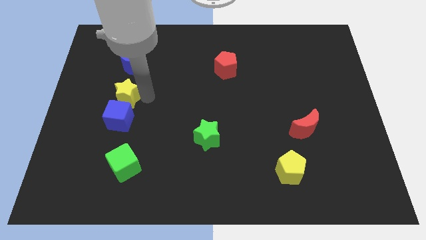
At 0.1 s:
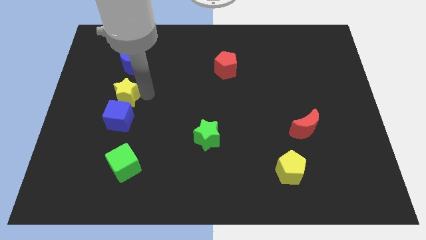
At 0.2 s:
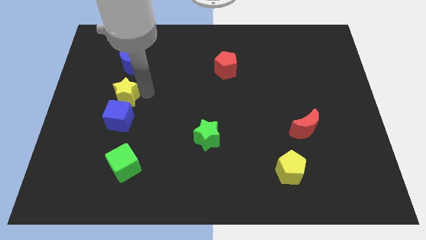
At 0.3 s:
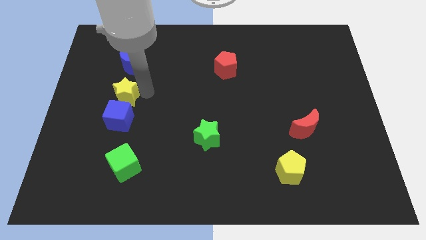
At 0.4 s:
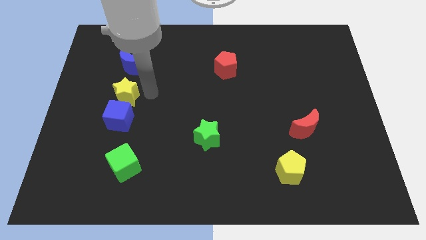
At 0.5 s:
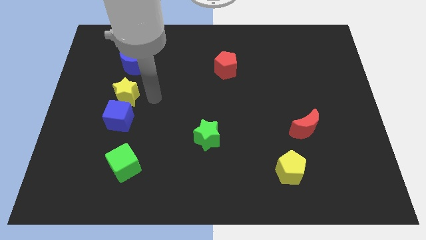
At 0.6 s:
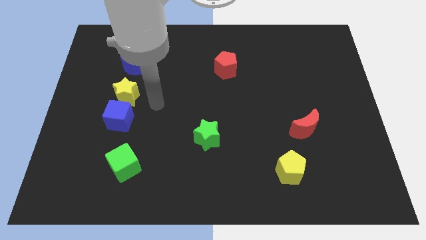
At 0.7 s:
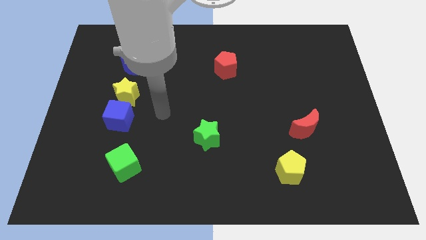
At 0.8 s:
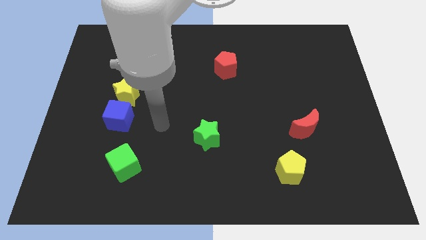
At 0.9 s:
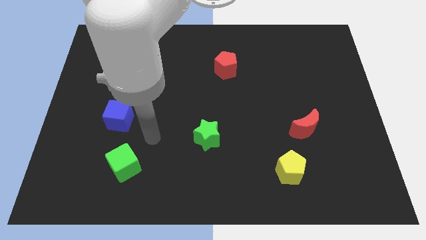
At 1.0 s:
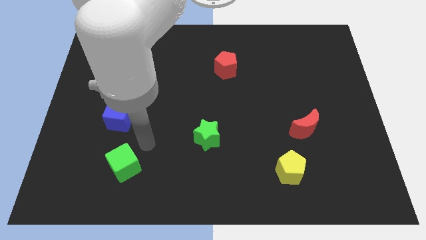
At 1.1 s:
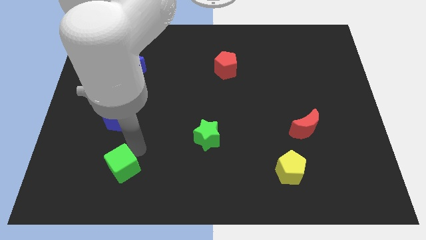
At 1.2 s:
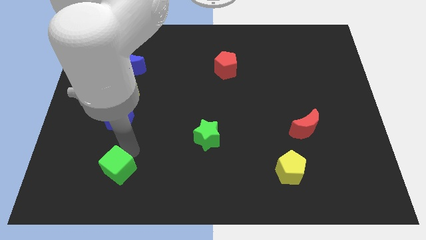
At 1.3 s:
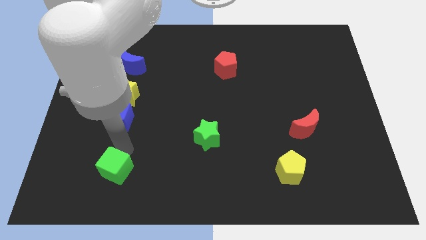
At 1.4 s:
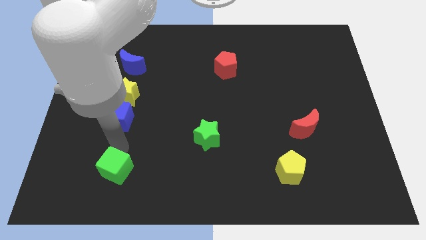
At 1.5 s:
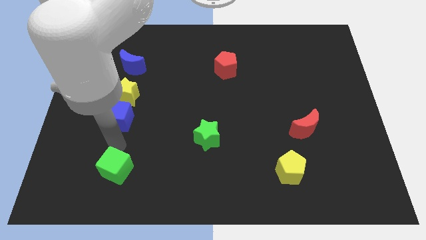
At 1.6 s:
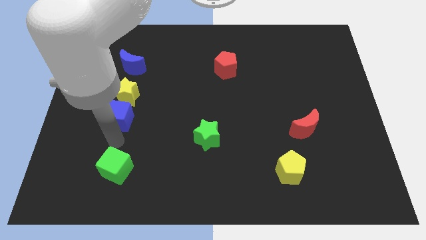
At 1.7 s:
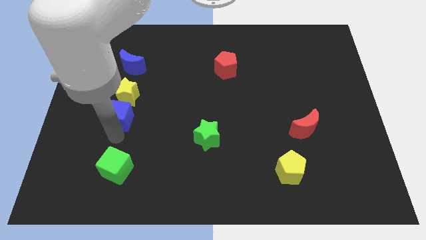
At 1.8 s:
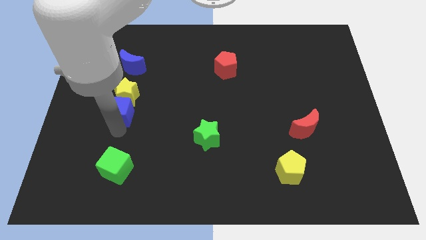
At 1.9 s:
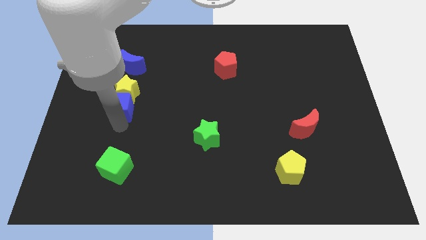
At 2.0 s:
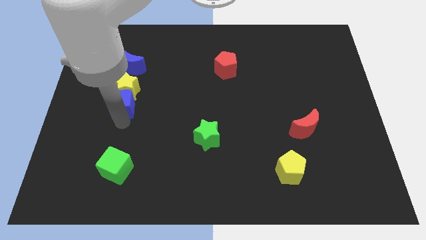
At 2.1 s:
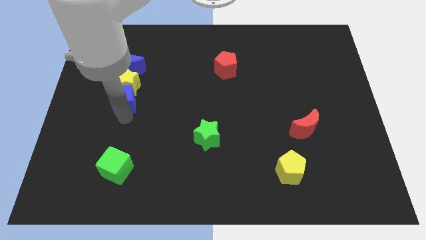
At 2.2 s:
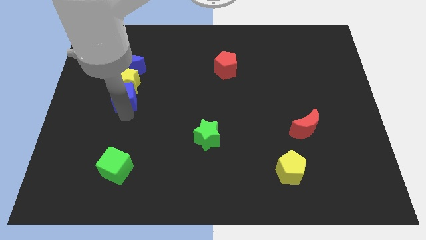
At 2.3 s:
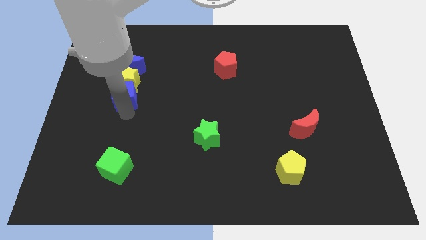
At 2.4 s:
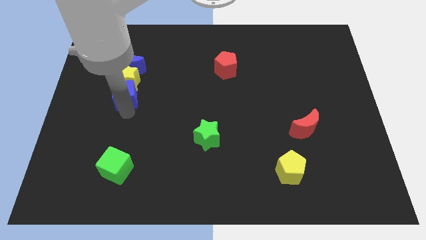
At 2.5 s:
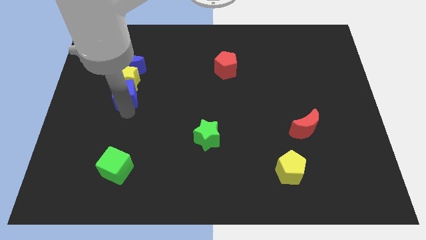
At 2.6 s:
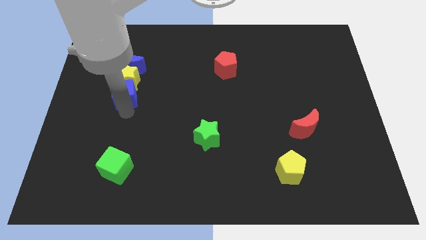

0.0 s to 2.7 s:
push the blue cube and the yellow star into the blue crescent

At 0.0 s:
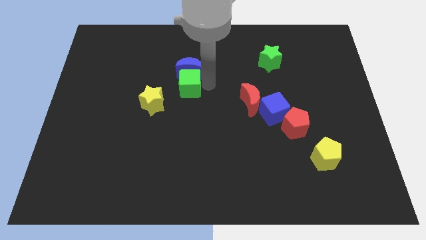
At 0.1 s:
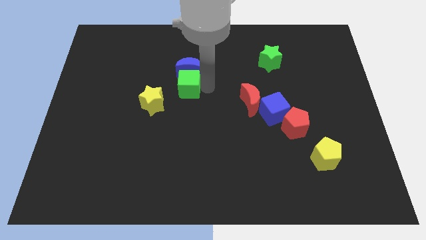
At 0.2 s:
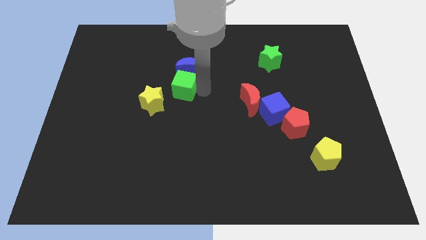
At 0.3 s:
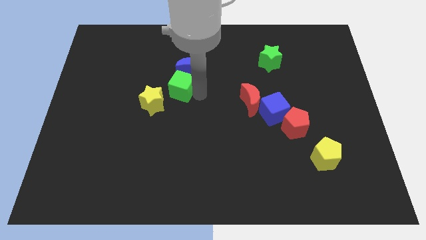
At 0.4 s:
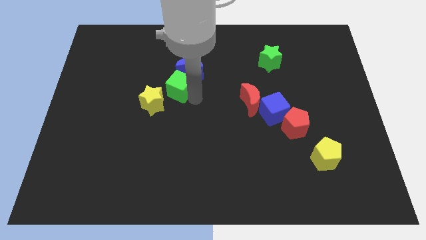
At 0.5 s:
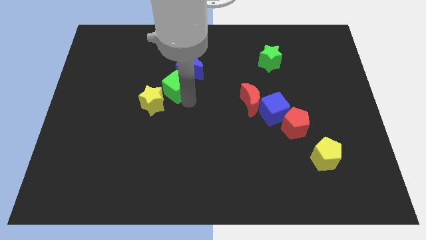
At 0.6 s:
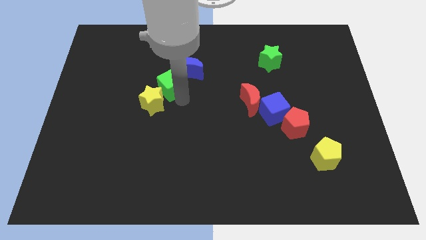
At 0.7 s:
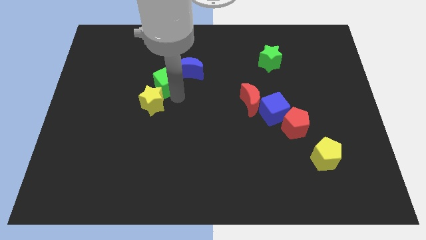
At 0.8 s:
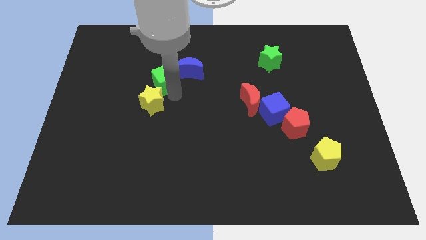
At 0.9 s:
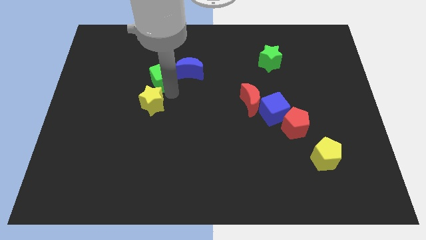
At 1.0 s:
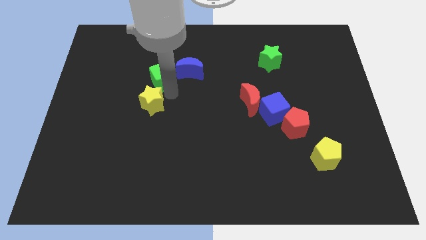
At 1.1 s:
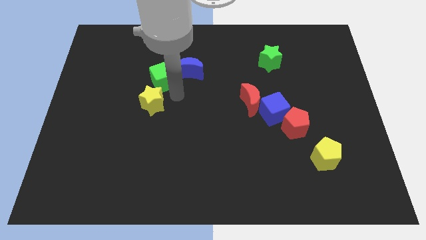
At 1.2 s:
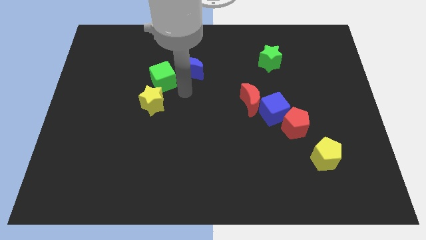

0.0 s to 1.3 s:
move the green cube in between the yellow star and blue crescent

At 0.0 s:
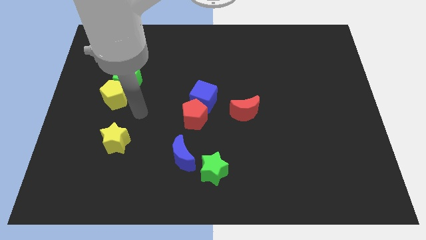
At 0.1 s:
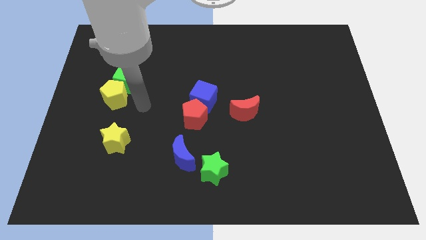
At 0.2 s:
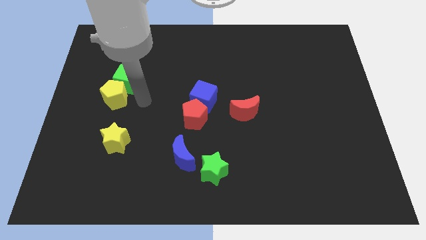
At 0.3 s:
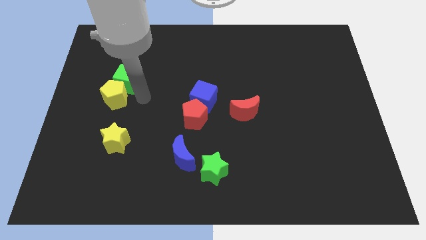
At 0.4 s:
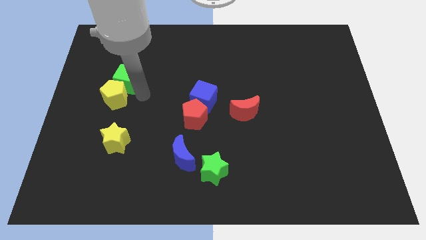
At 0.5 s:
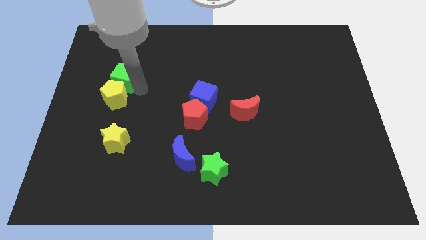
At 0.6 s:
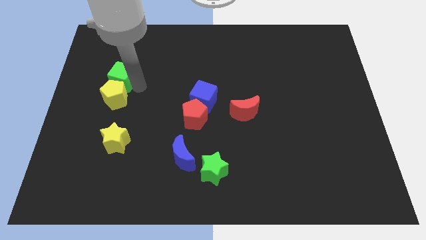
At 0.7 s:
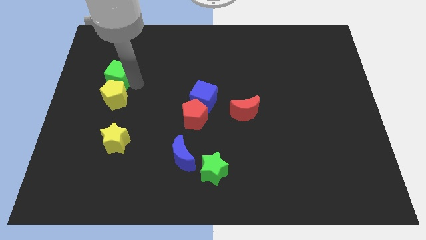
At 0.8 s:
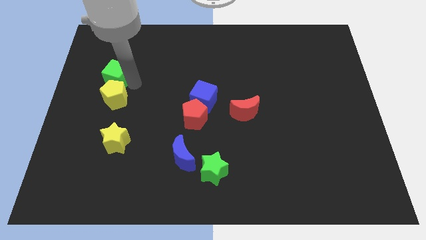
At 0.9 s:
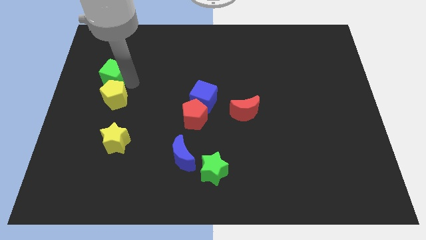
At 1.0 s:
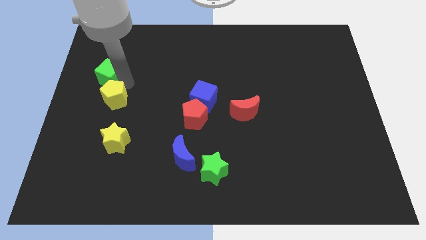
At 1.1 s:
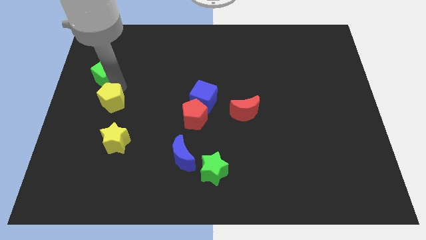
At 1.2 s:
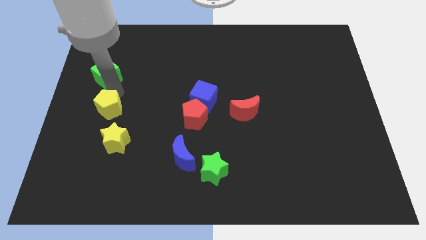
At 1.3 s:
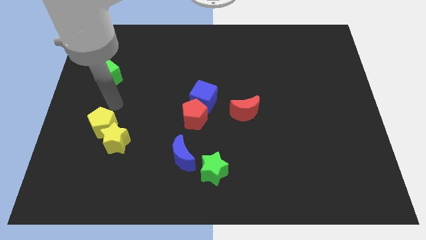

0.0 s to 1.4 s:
separate the yellow pentagon from the green cube

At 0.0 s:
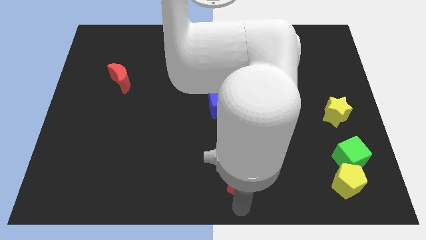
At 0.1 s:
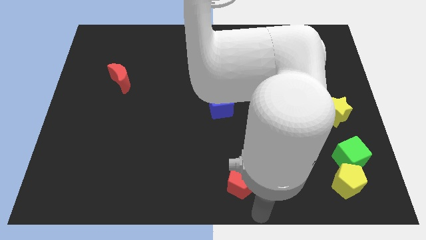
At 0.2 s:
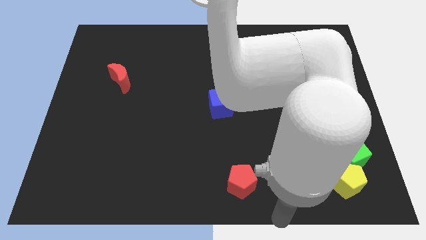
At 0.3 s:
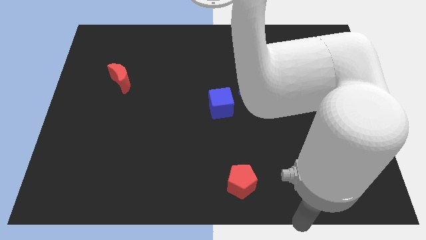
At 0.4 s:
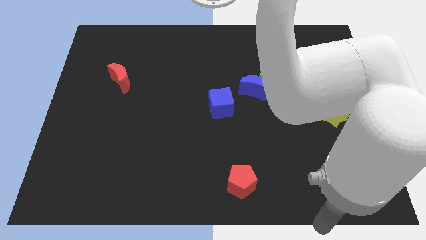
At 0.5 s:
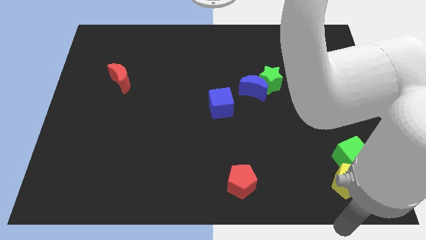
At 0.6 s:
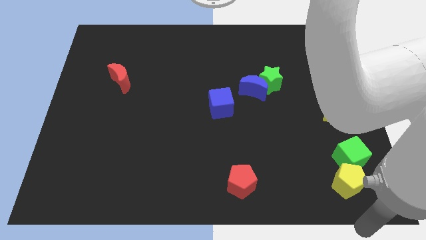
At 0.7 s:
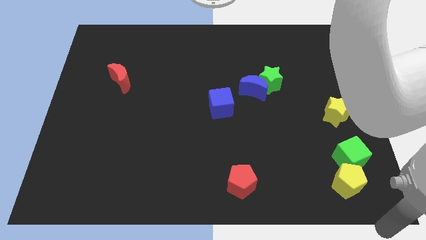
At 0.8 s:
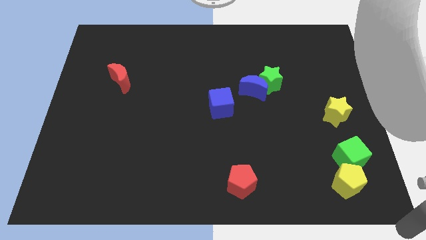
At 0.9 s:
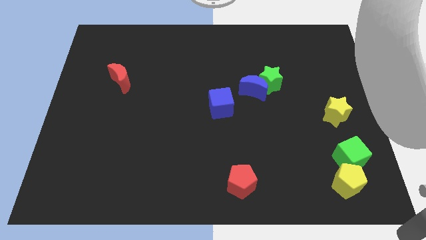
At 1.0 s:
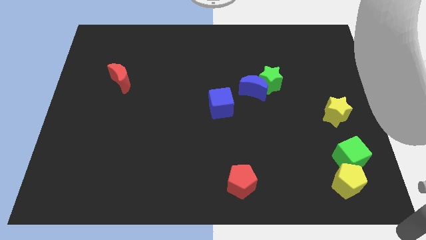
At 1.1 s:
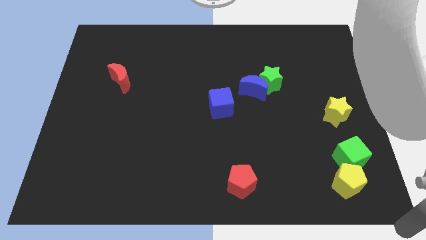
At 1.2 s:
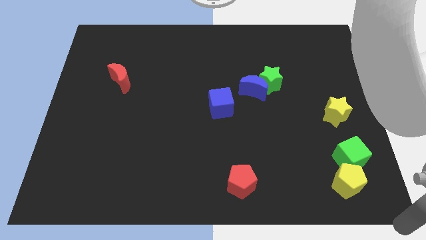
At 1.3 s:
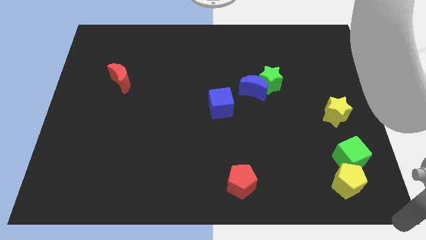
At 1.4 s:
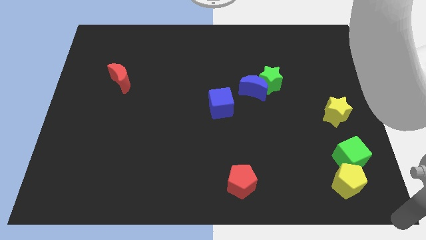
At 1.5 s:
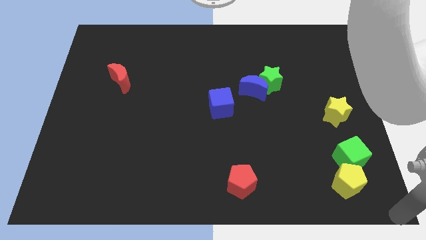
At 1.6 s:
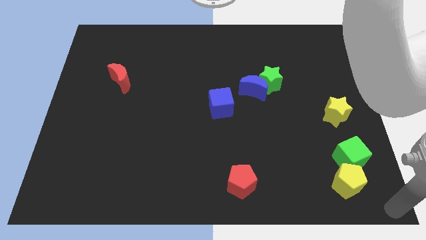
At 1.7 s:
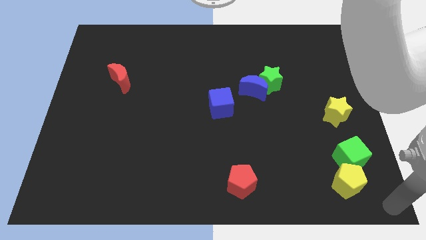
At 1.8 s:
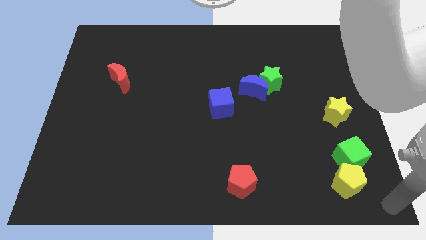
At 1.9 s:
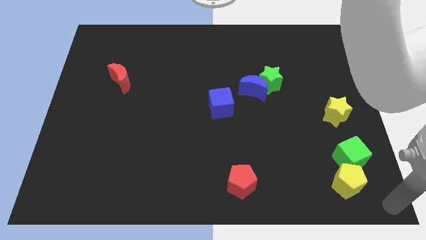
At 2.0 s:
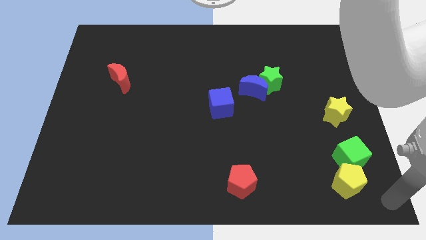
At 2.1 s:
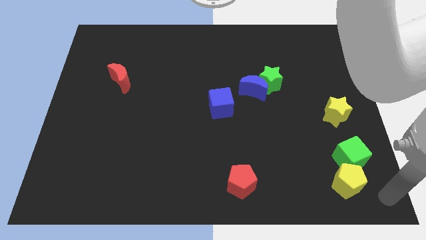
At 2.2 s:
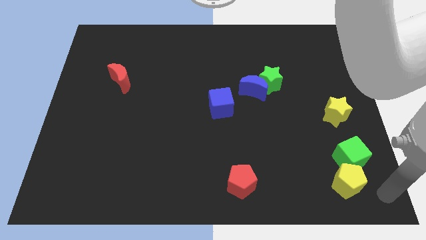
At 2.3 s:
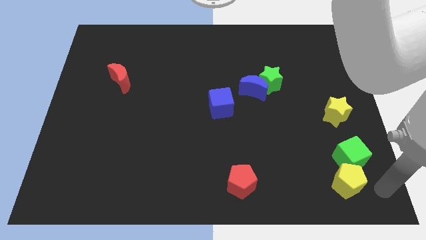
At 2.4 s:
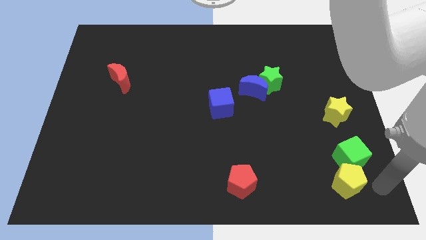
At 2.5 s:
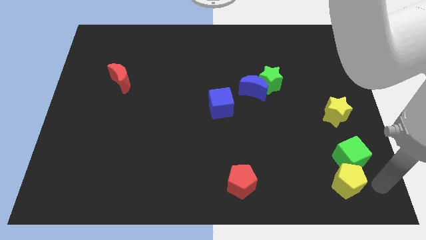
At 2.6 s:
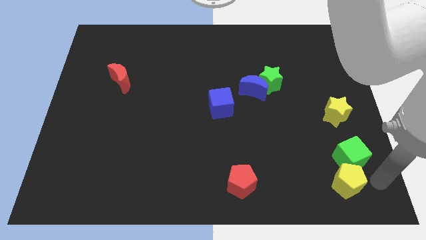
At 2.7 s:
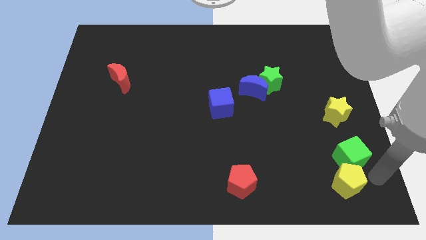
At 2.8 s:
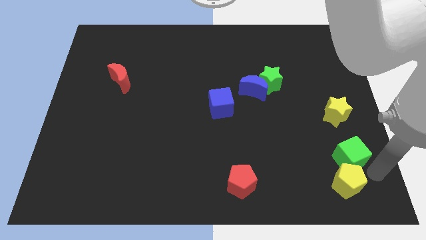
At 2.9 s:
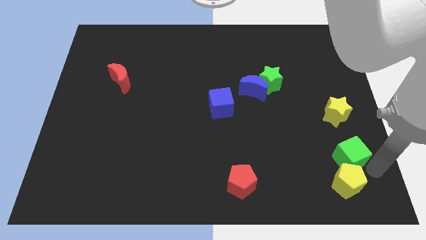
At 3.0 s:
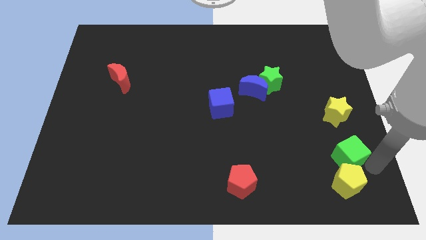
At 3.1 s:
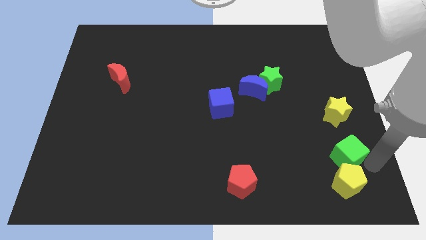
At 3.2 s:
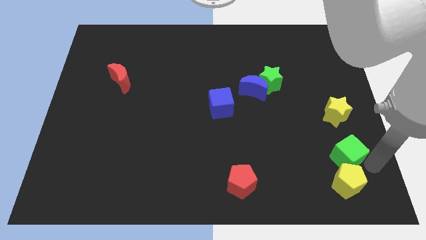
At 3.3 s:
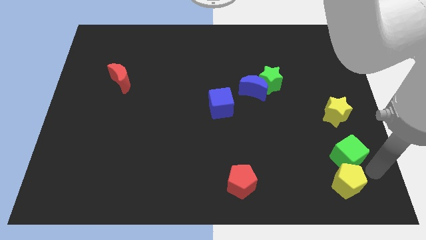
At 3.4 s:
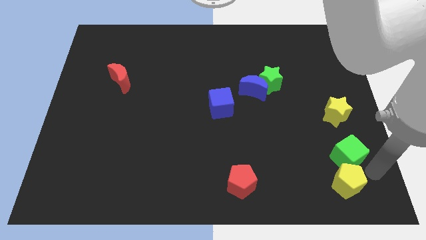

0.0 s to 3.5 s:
move the green cube slightly to the top

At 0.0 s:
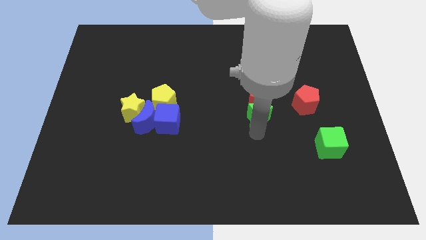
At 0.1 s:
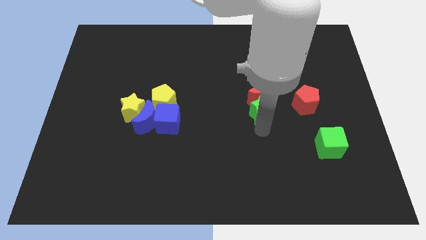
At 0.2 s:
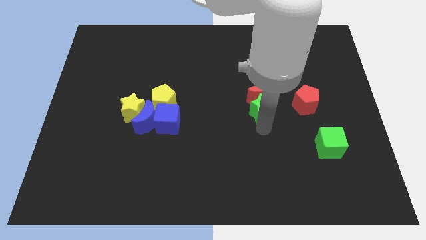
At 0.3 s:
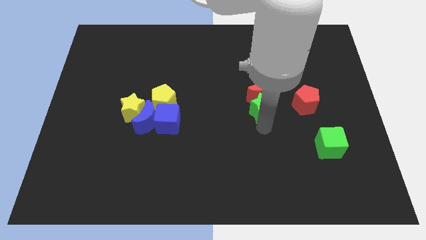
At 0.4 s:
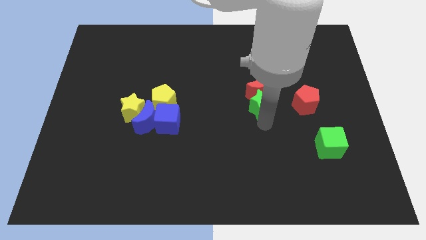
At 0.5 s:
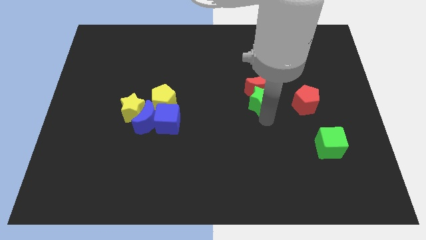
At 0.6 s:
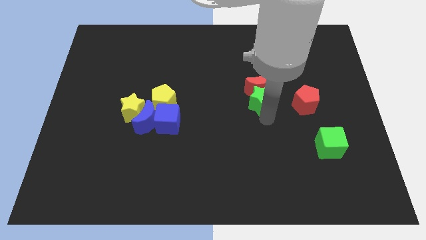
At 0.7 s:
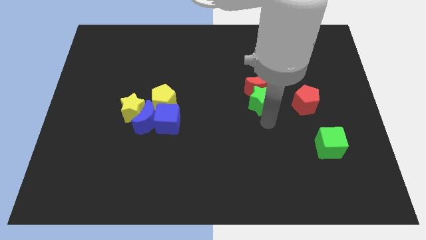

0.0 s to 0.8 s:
push the green star to the top of the board
